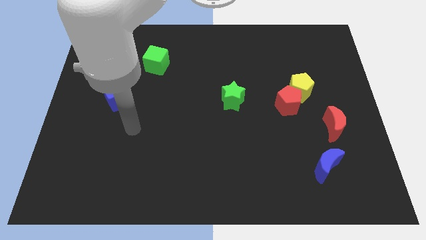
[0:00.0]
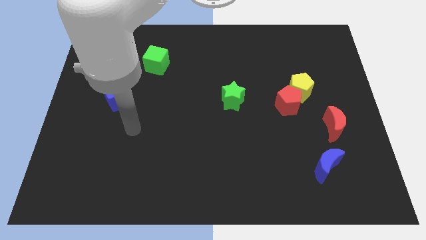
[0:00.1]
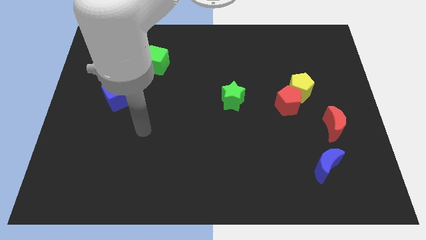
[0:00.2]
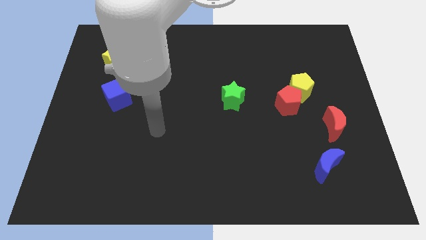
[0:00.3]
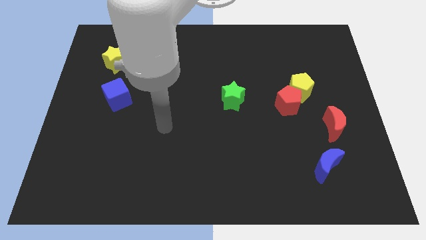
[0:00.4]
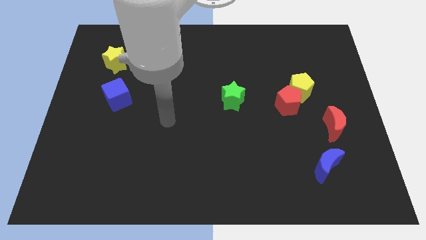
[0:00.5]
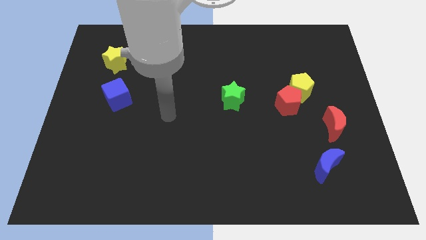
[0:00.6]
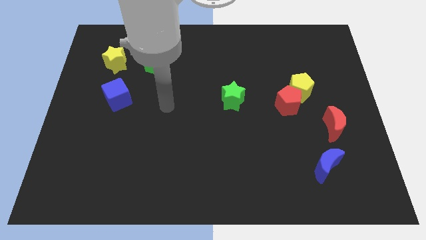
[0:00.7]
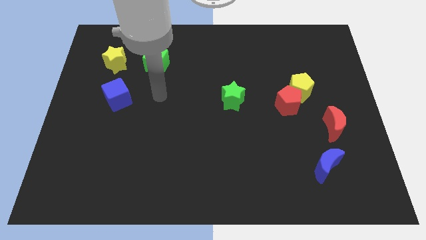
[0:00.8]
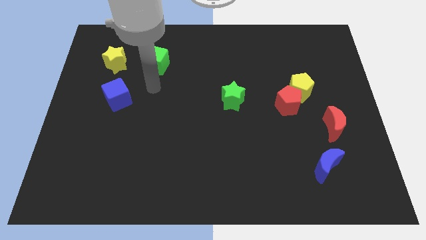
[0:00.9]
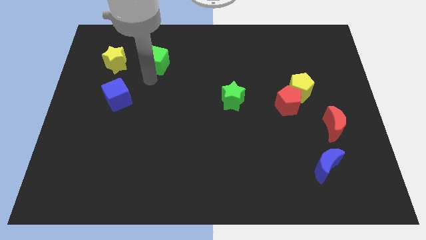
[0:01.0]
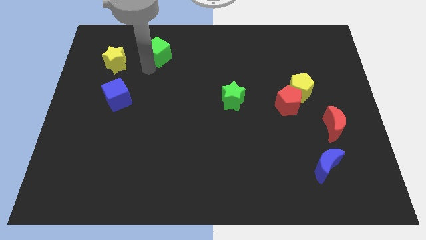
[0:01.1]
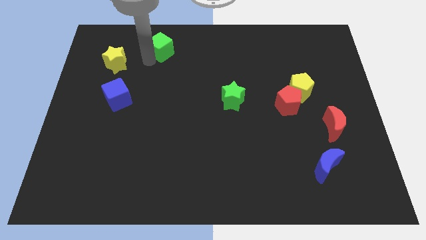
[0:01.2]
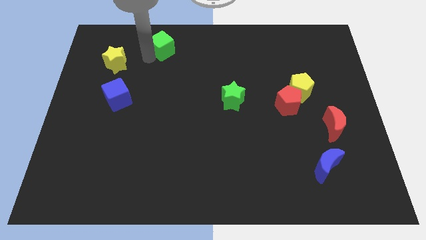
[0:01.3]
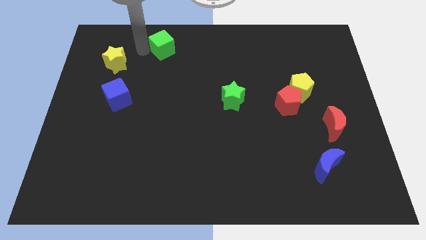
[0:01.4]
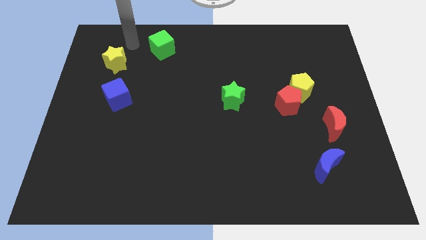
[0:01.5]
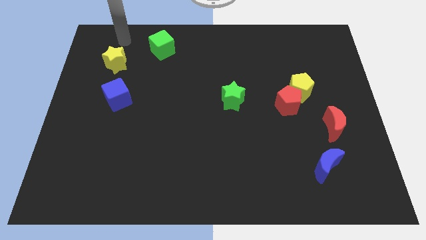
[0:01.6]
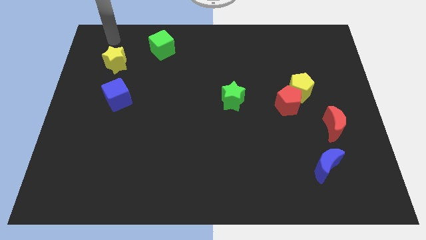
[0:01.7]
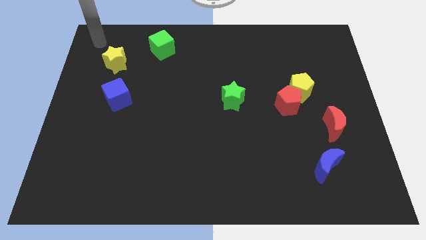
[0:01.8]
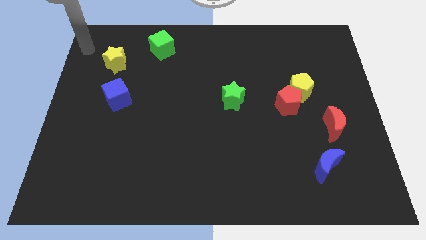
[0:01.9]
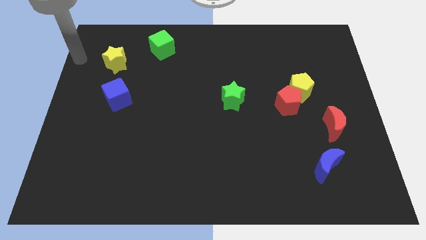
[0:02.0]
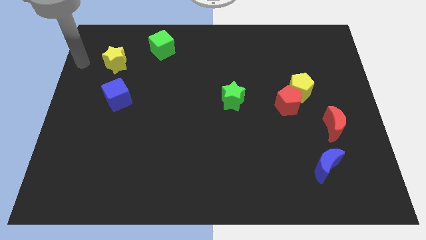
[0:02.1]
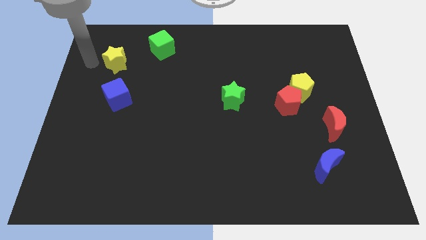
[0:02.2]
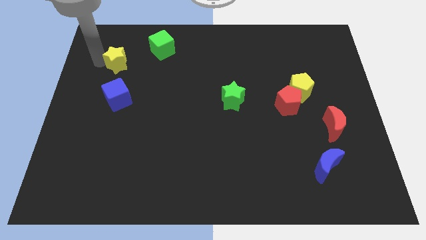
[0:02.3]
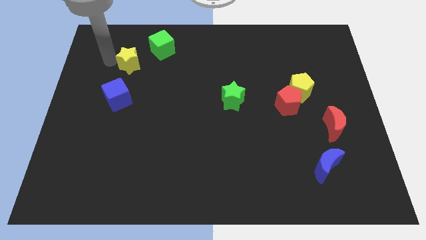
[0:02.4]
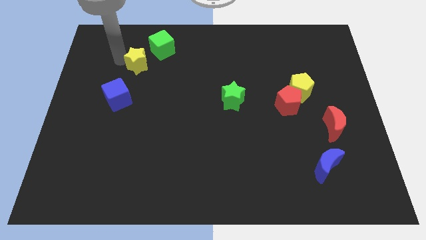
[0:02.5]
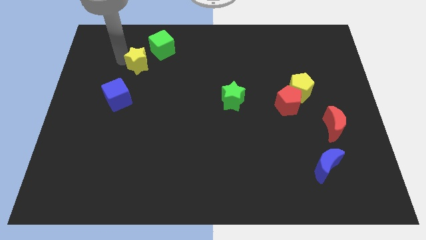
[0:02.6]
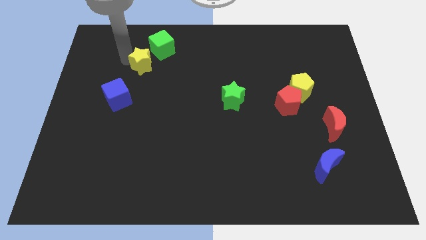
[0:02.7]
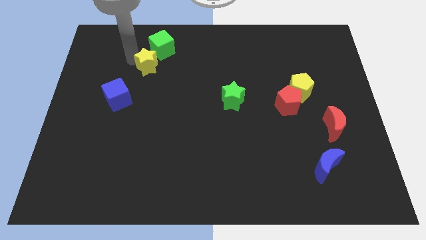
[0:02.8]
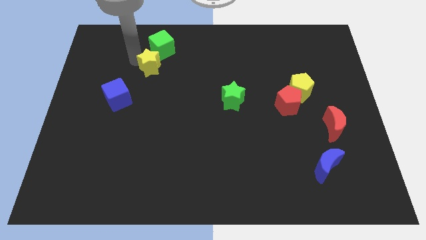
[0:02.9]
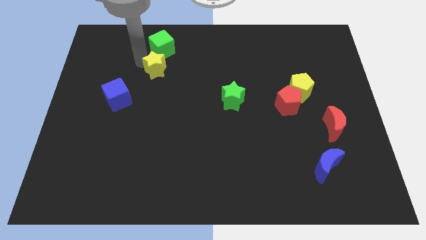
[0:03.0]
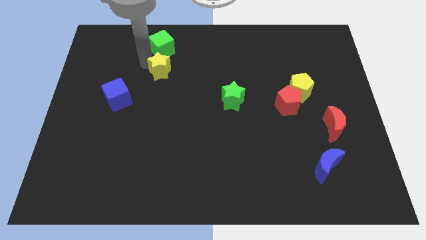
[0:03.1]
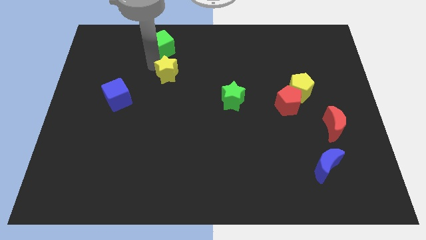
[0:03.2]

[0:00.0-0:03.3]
place the green cube and the yellow star in a vertical line

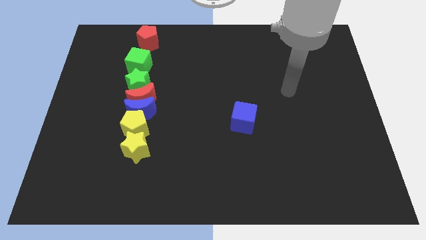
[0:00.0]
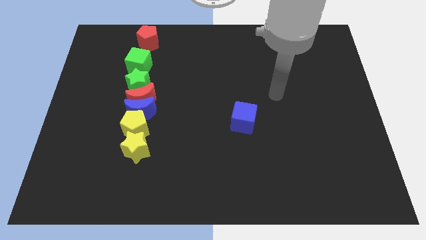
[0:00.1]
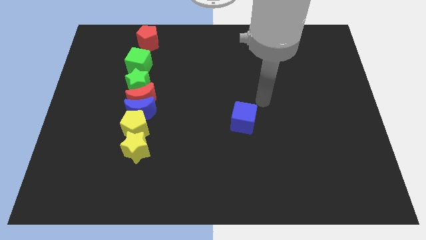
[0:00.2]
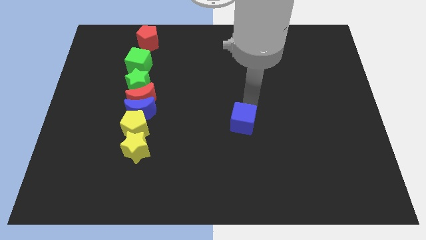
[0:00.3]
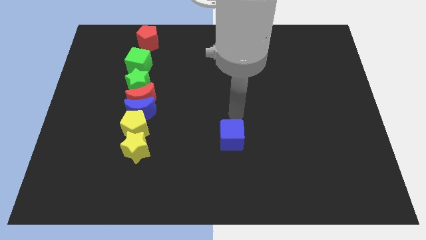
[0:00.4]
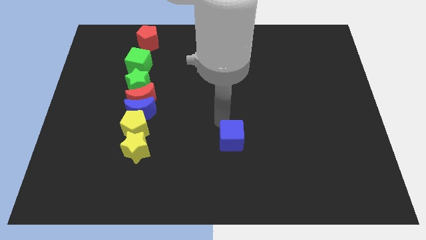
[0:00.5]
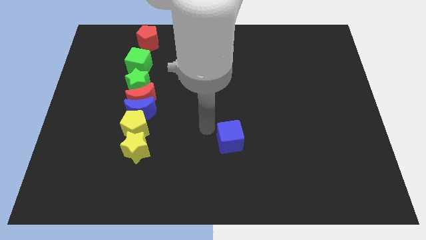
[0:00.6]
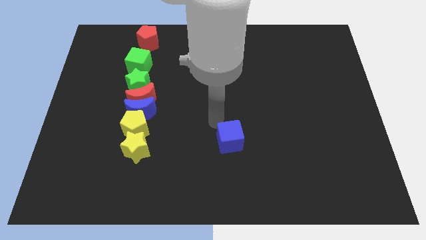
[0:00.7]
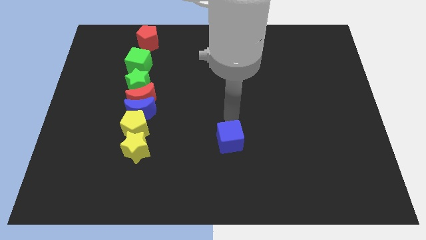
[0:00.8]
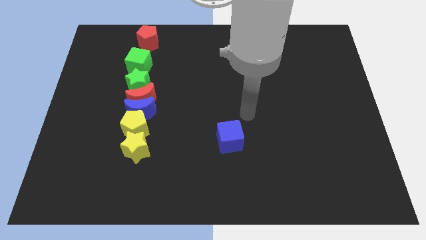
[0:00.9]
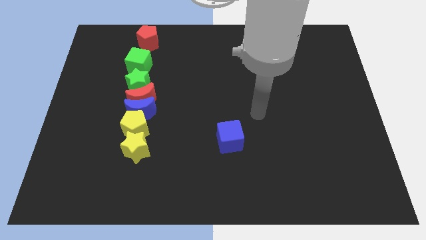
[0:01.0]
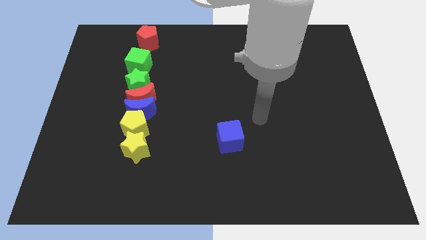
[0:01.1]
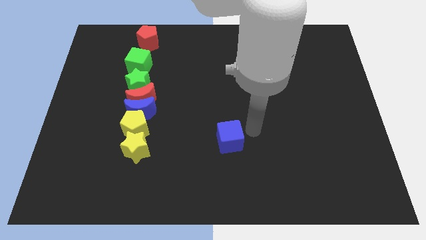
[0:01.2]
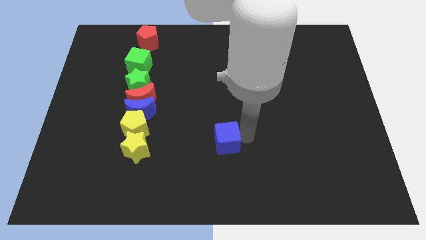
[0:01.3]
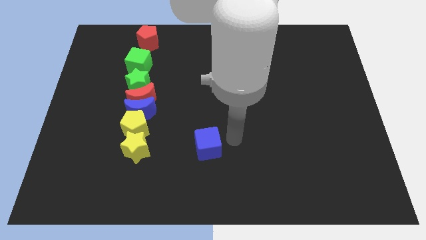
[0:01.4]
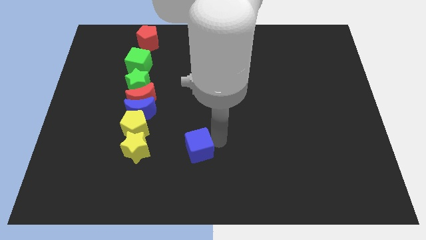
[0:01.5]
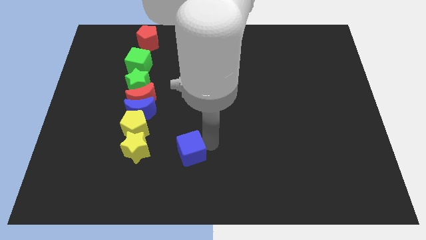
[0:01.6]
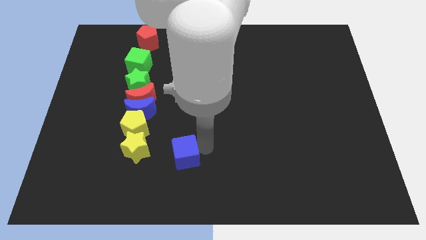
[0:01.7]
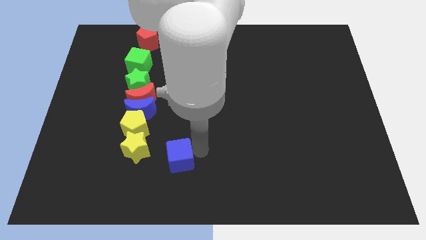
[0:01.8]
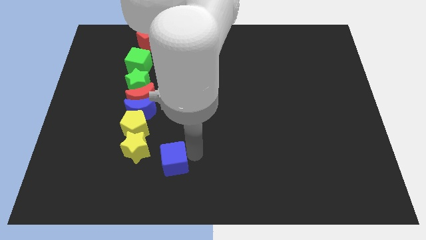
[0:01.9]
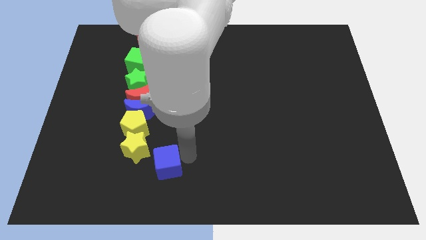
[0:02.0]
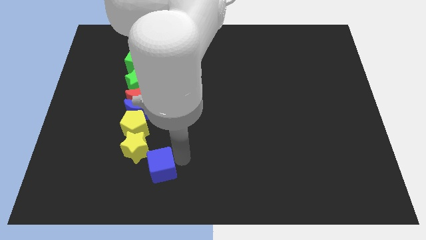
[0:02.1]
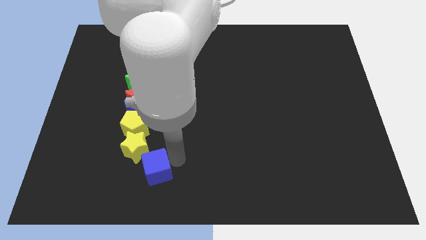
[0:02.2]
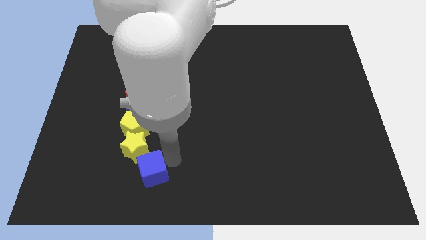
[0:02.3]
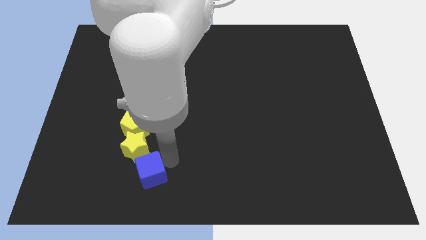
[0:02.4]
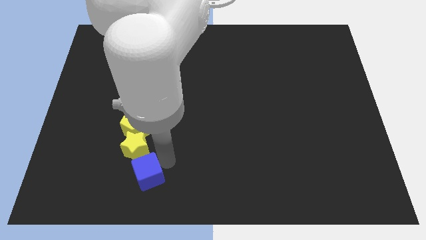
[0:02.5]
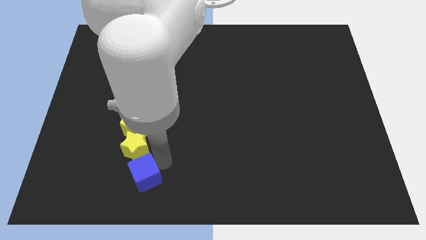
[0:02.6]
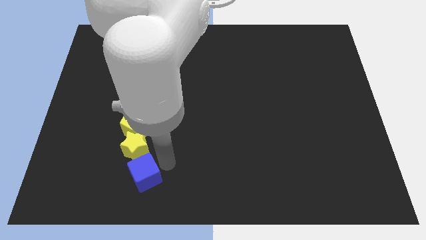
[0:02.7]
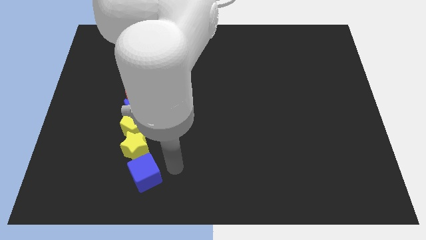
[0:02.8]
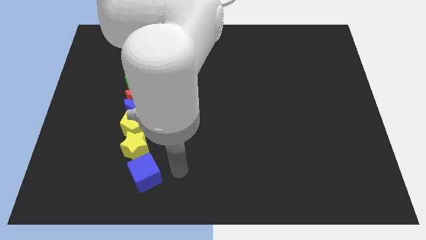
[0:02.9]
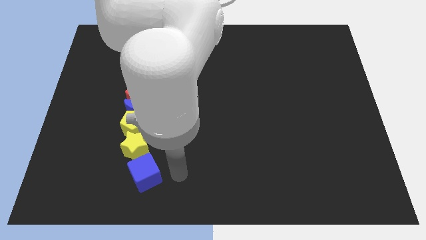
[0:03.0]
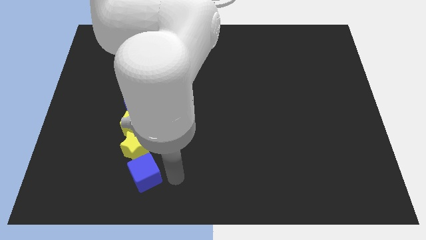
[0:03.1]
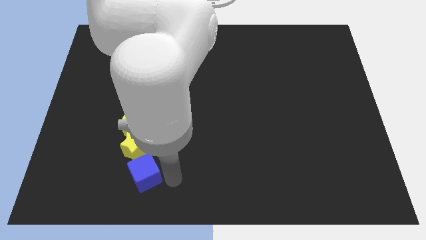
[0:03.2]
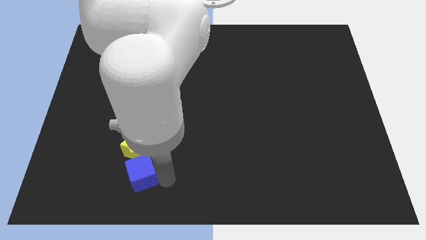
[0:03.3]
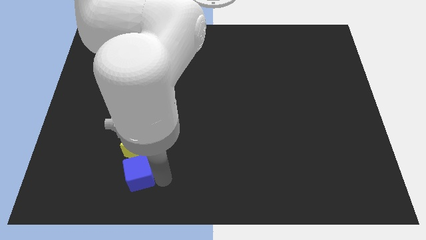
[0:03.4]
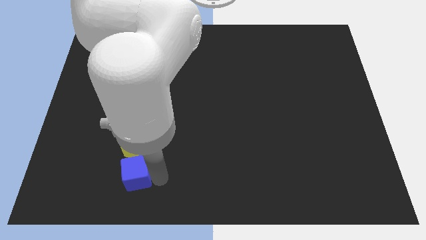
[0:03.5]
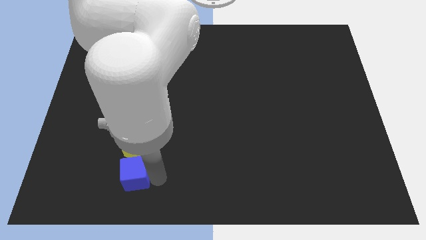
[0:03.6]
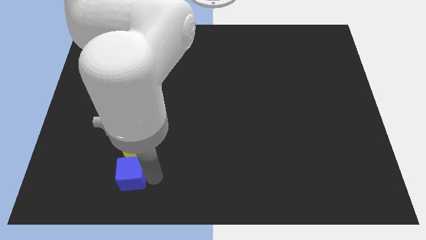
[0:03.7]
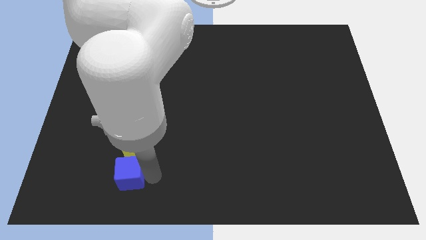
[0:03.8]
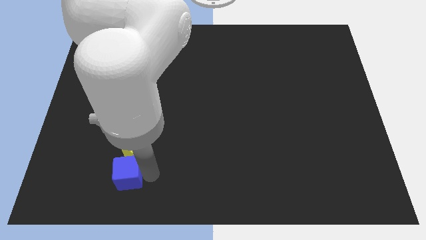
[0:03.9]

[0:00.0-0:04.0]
place the blue cube on the bottom of yellow star

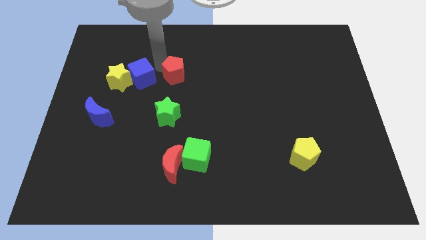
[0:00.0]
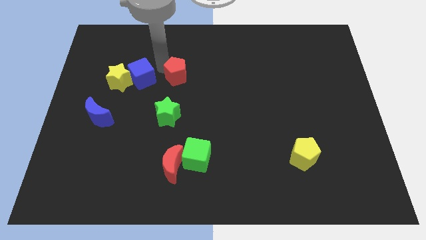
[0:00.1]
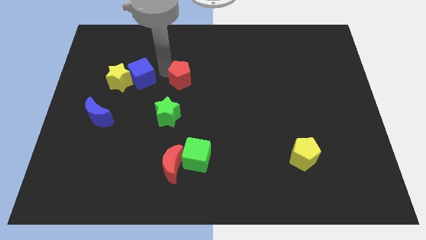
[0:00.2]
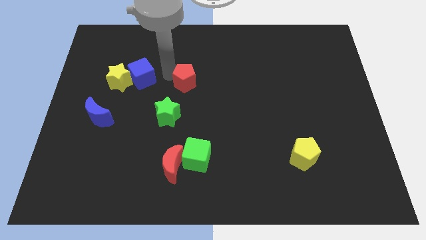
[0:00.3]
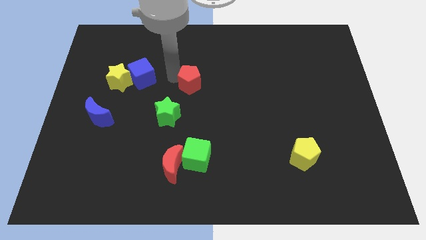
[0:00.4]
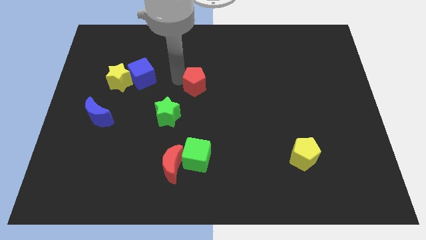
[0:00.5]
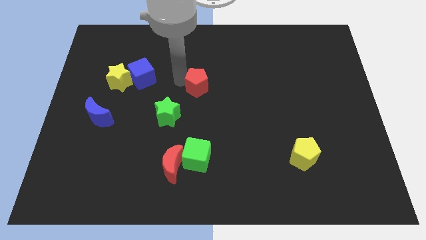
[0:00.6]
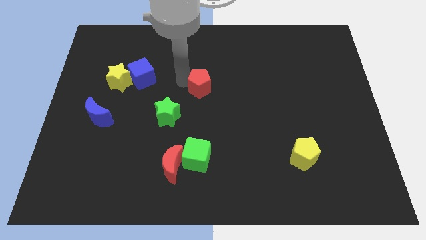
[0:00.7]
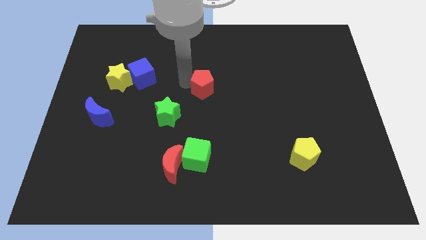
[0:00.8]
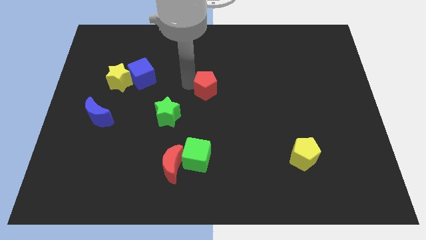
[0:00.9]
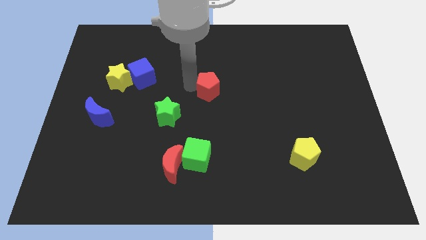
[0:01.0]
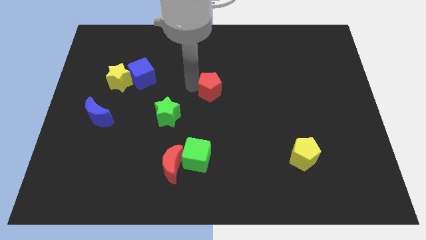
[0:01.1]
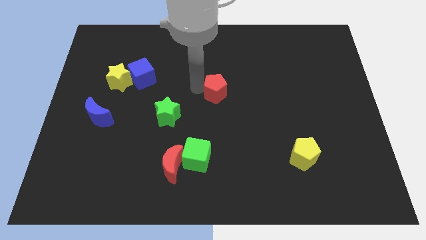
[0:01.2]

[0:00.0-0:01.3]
move the red pentagon towards the yellow pentagon

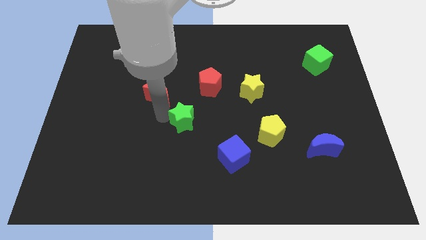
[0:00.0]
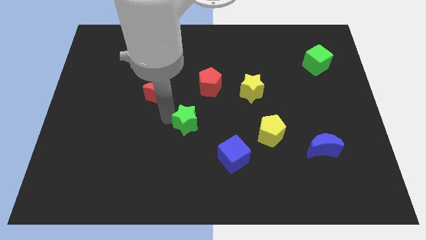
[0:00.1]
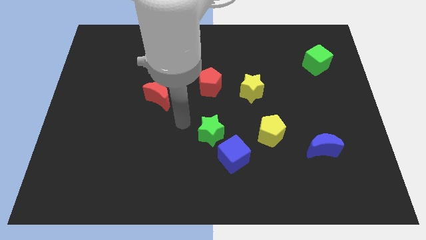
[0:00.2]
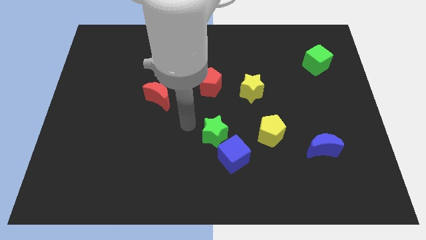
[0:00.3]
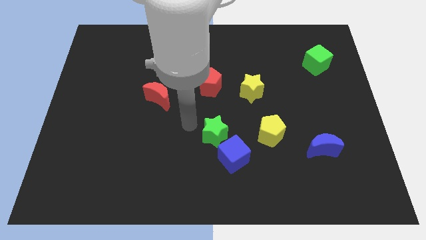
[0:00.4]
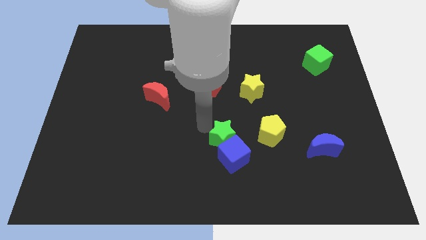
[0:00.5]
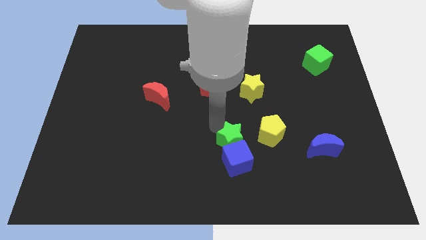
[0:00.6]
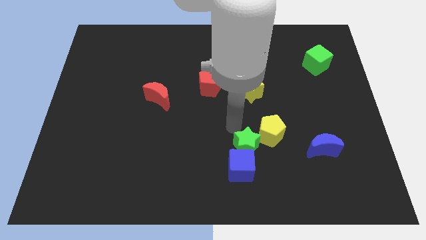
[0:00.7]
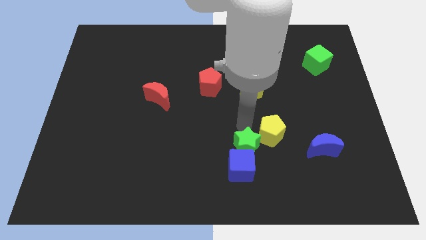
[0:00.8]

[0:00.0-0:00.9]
move the green star above the blue cube
